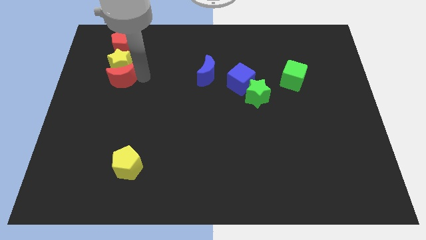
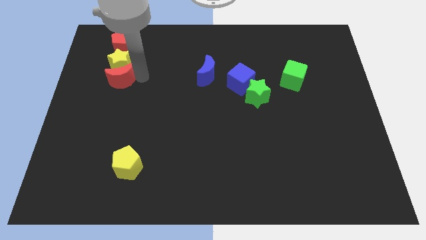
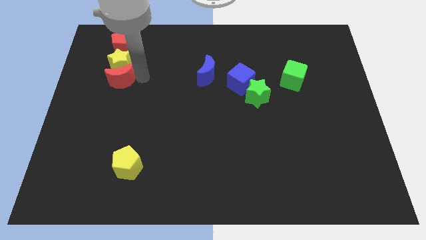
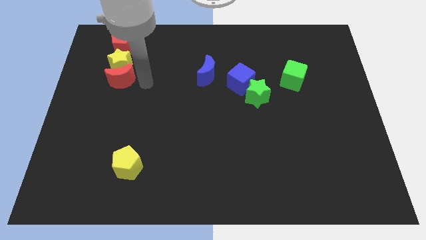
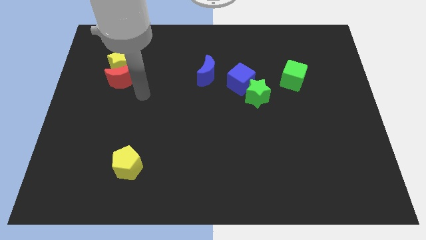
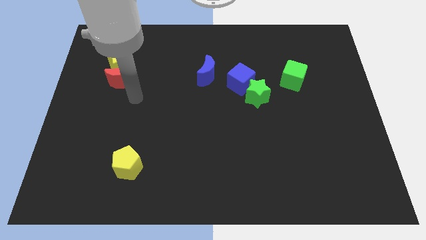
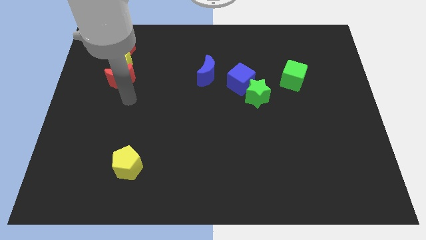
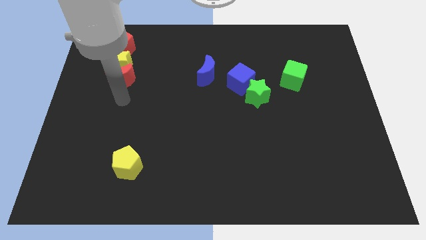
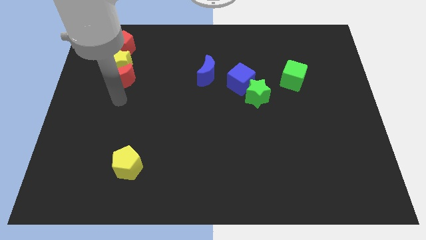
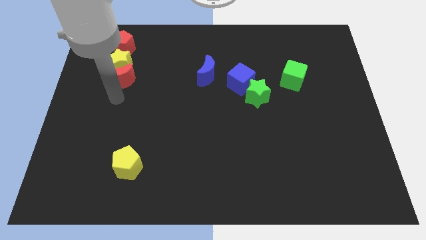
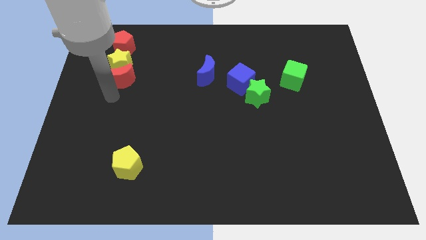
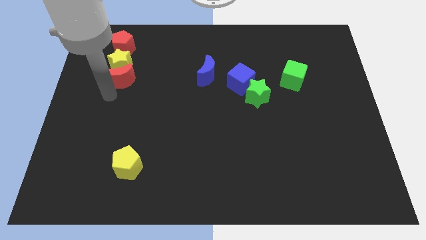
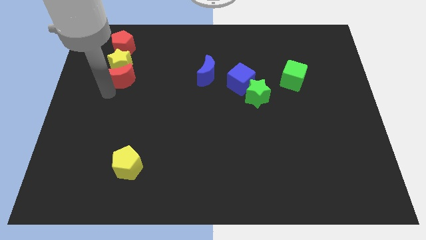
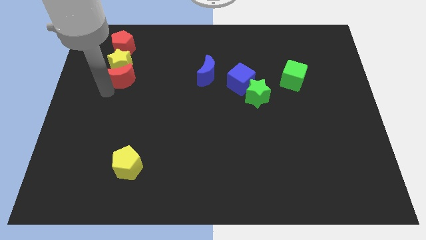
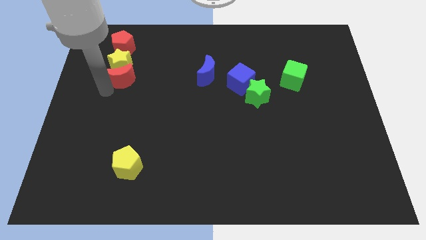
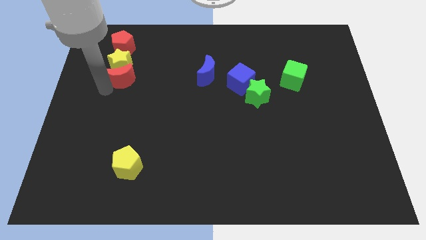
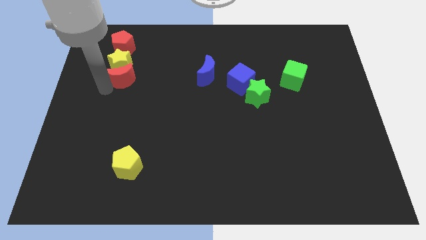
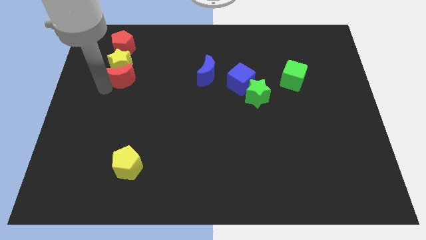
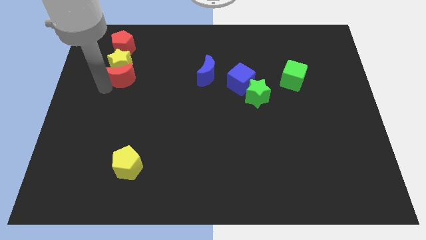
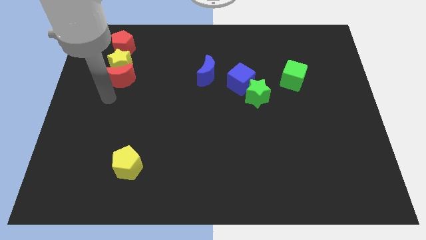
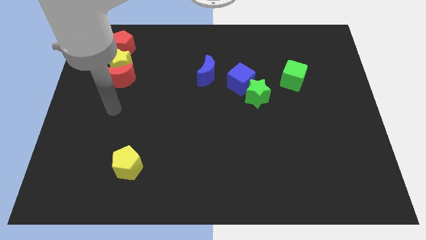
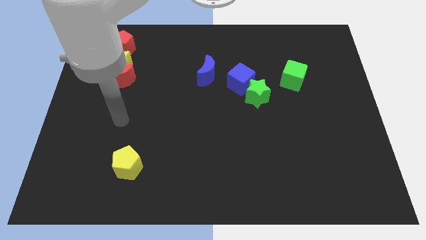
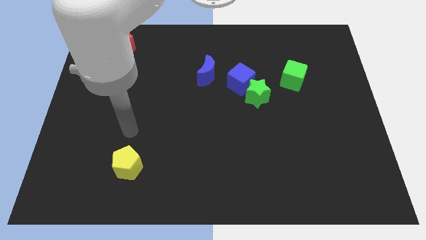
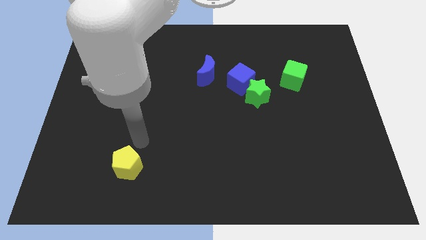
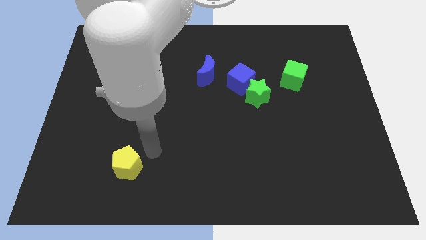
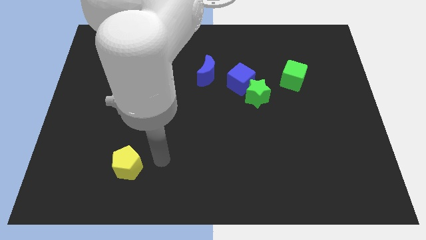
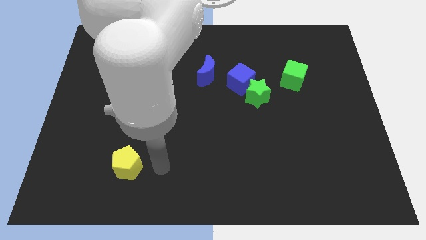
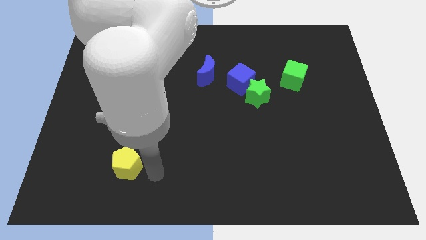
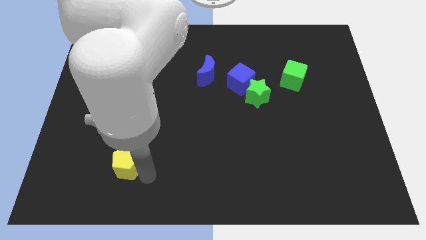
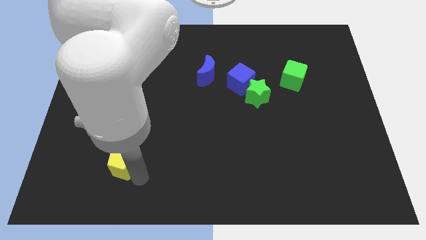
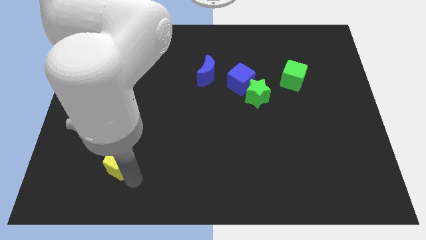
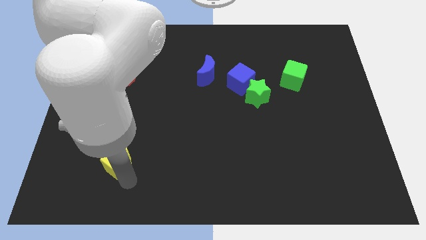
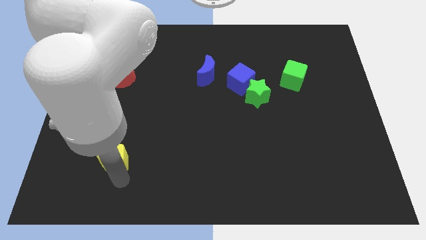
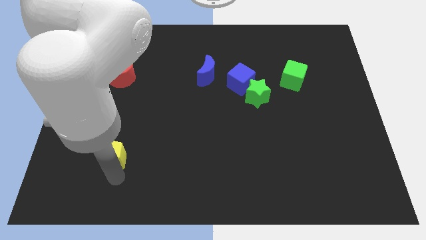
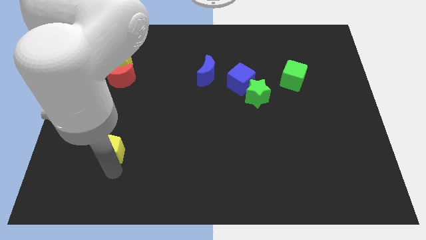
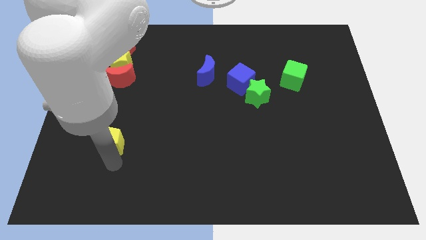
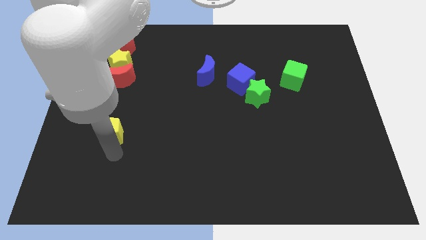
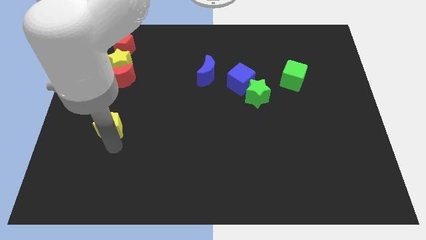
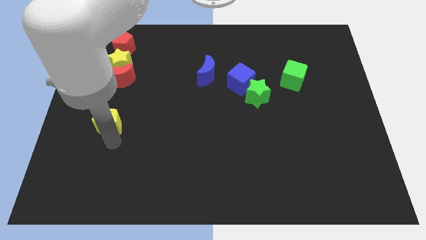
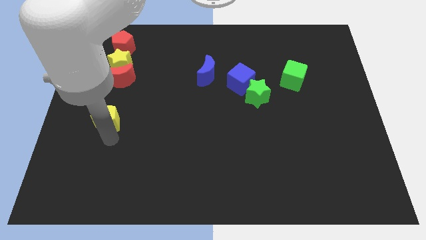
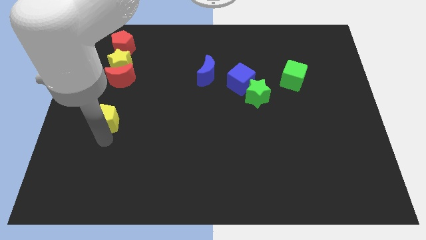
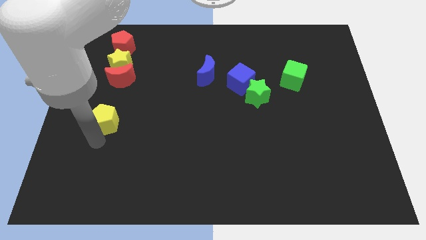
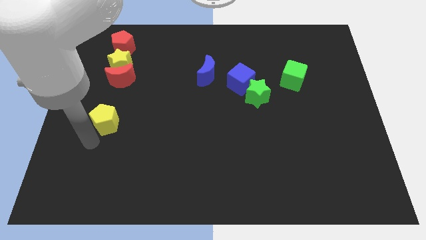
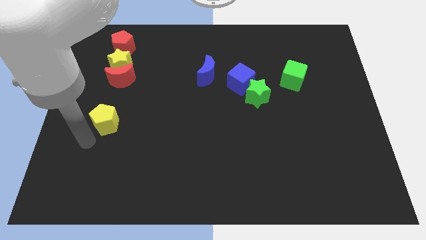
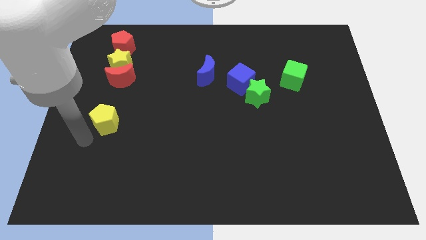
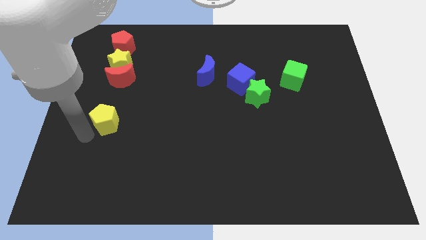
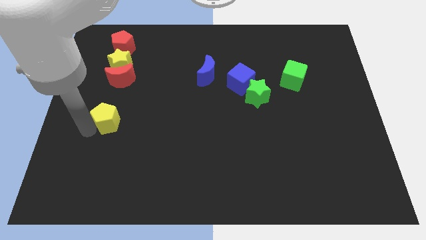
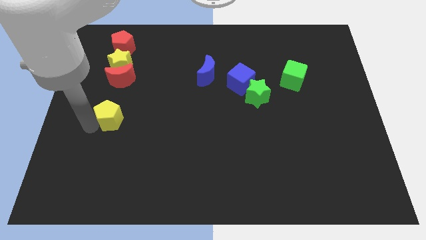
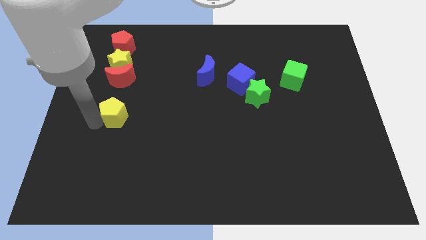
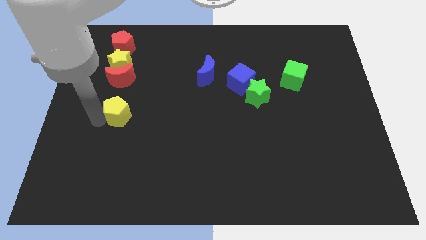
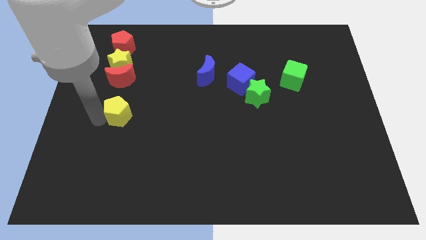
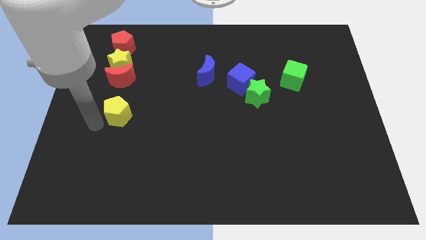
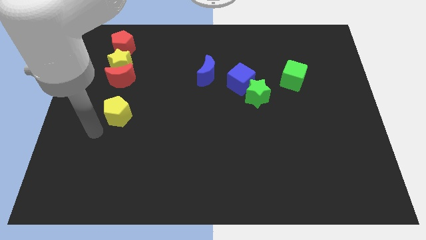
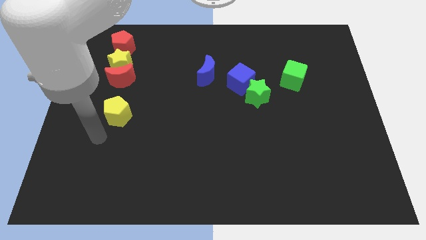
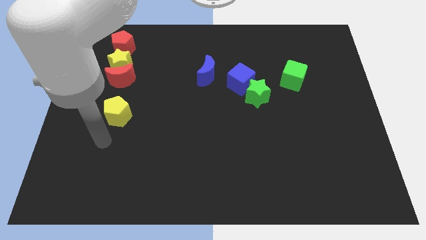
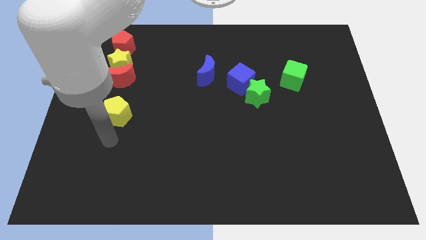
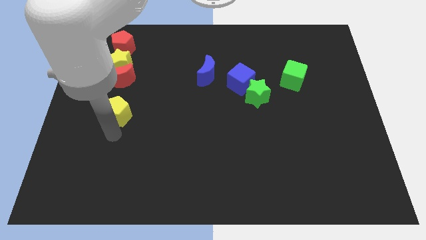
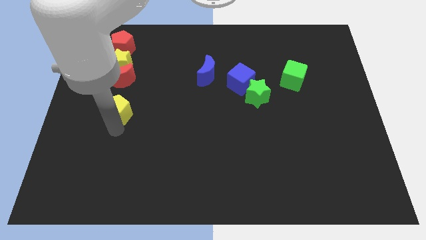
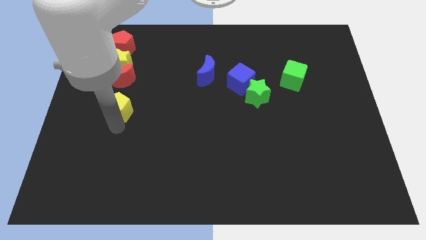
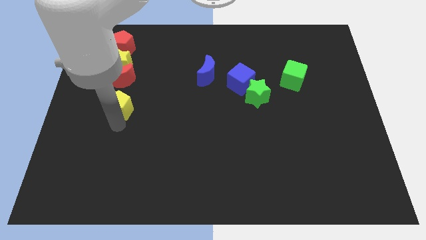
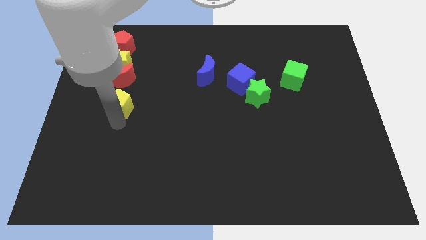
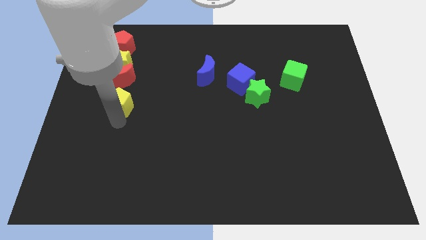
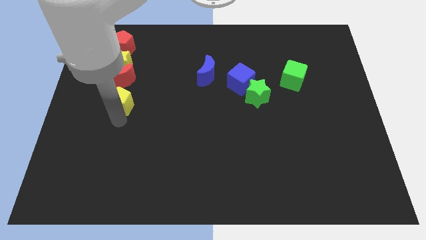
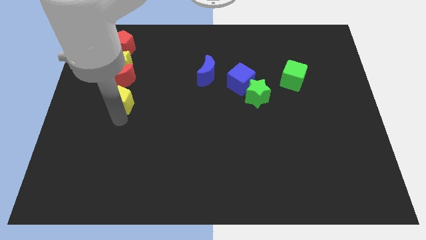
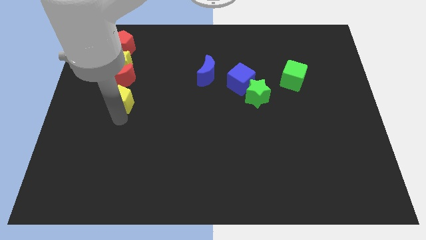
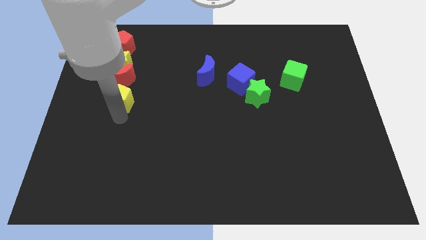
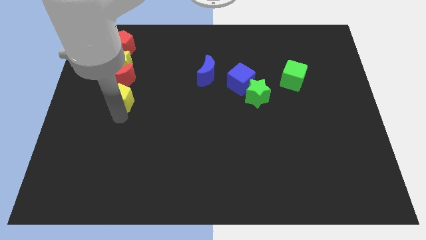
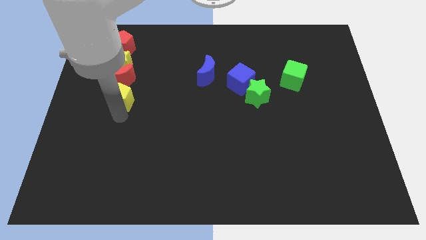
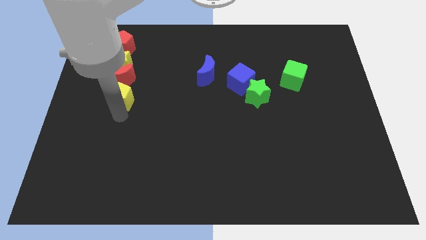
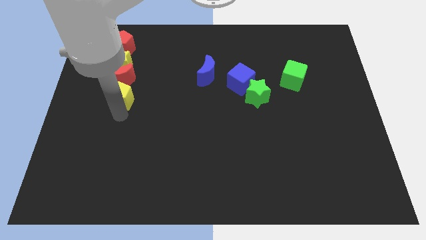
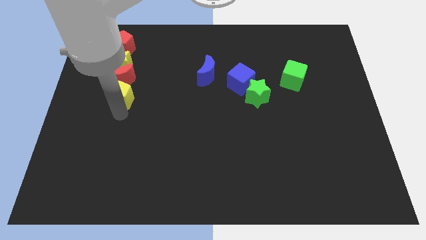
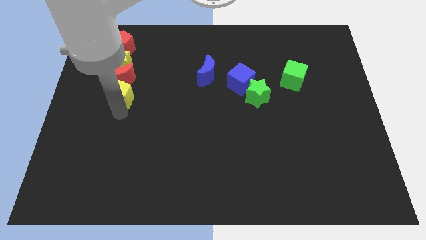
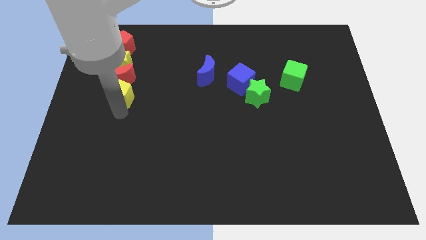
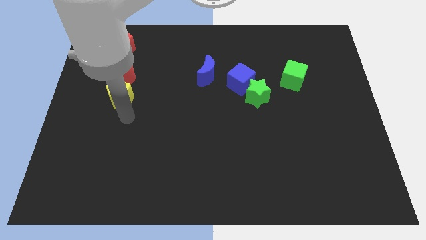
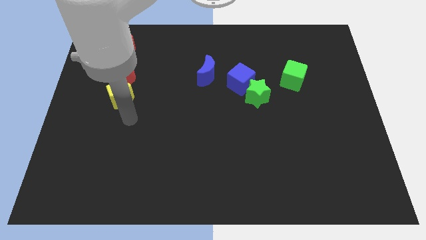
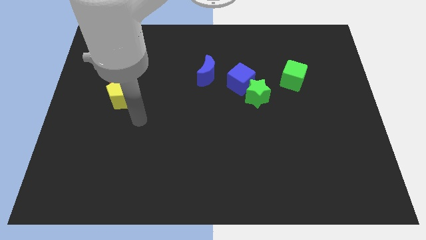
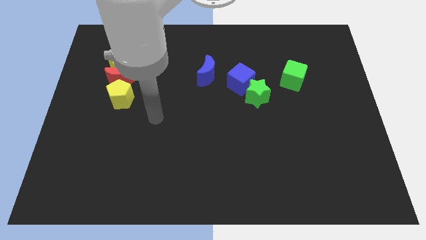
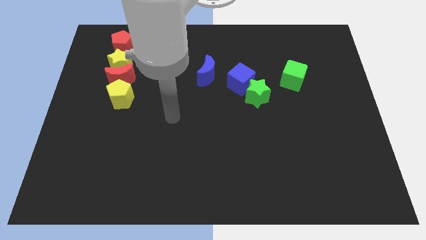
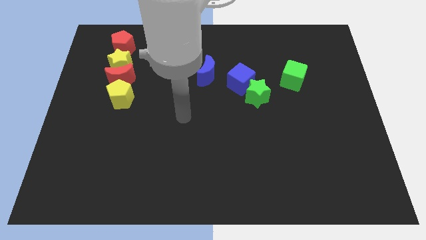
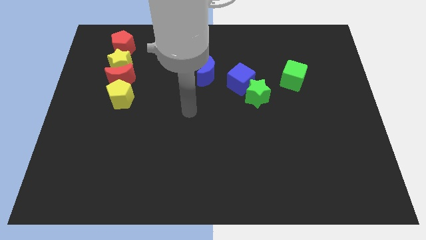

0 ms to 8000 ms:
move the yellow pentagon below the red crescent

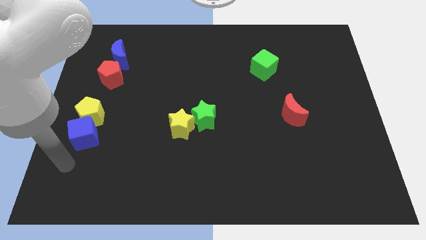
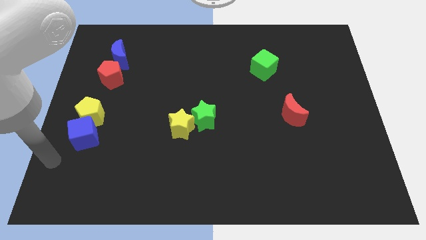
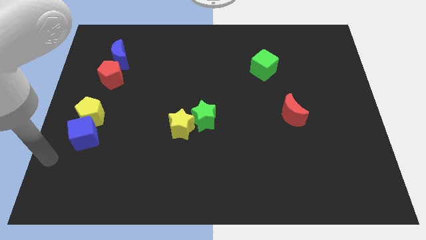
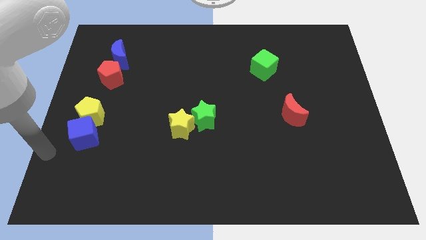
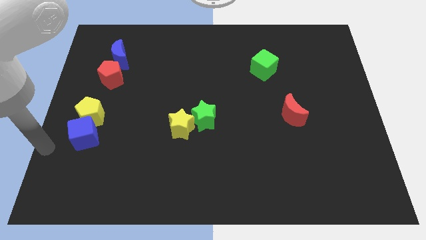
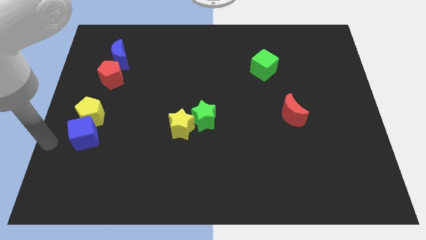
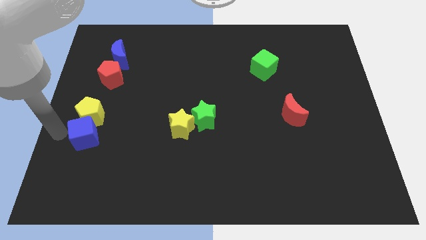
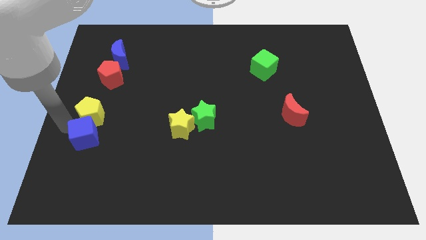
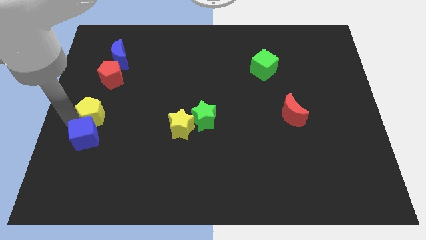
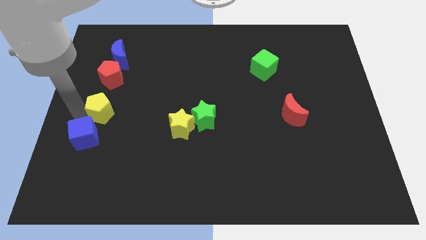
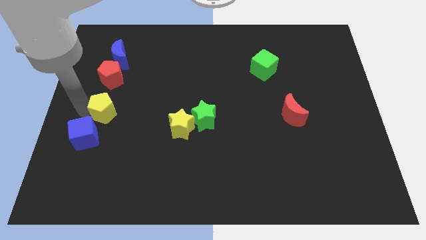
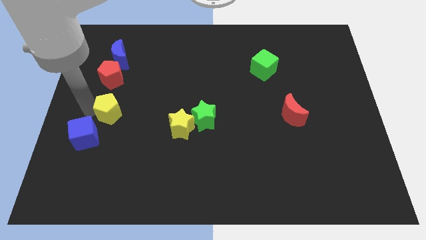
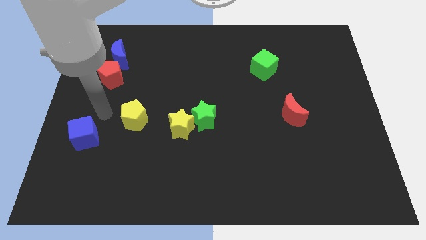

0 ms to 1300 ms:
separate yellow pentagon from the blue cube
